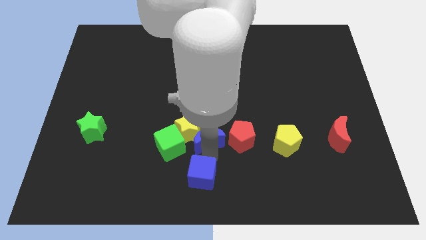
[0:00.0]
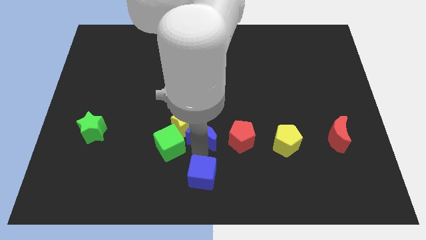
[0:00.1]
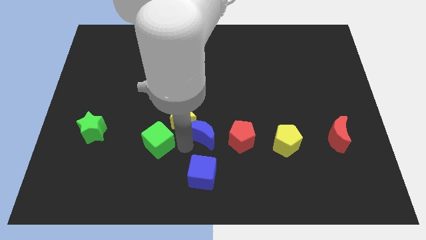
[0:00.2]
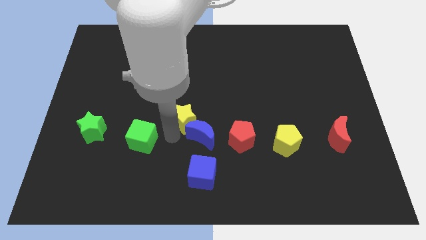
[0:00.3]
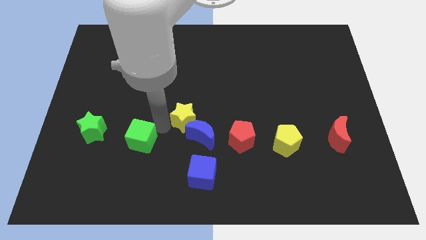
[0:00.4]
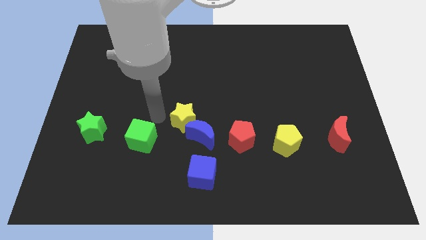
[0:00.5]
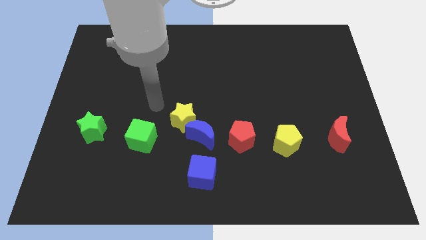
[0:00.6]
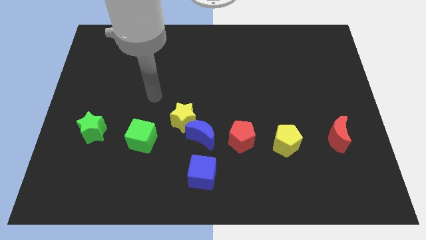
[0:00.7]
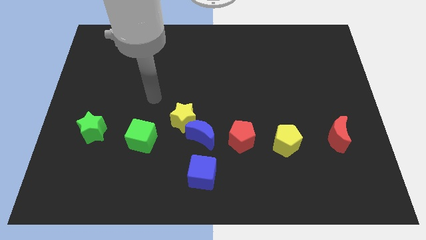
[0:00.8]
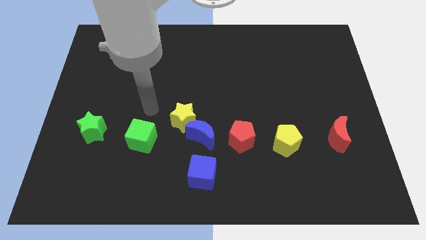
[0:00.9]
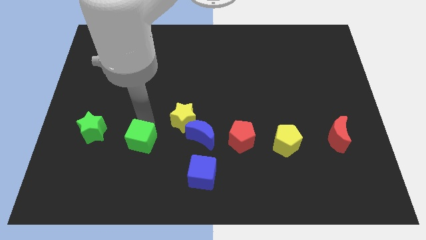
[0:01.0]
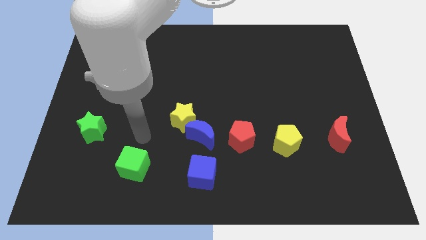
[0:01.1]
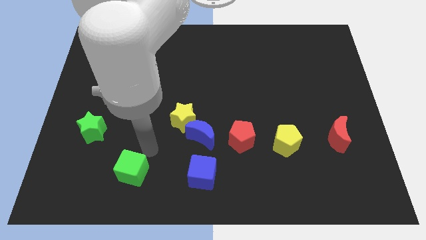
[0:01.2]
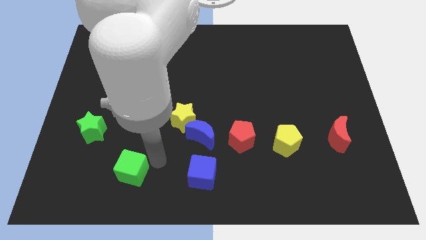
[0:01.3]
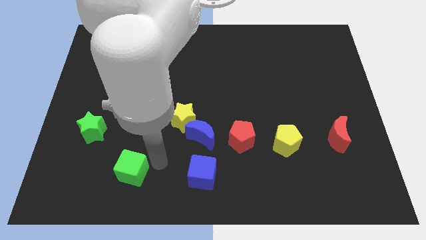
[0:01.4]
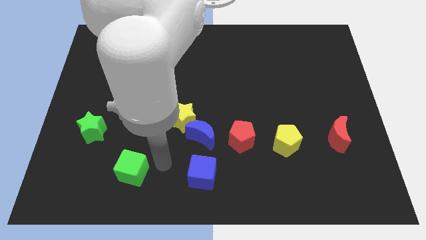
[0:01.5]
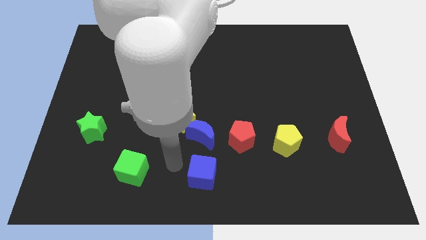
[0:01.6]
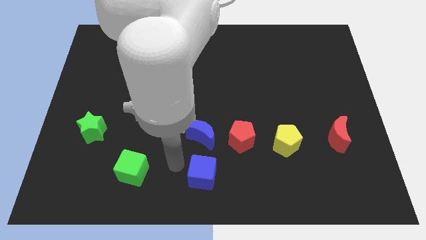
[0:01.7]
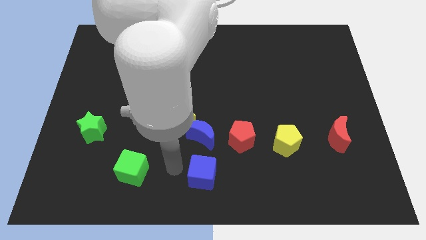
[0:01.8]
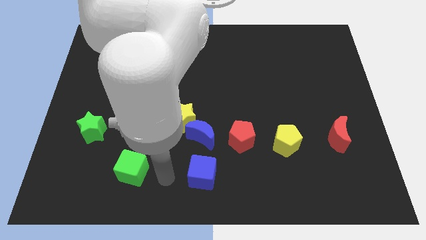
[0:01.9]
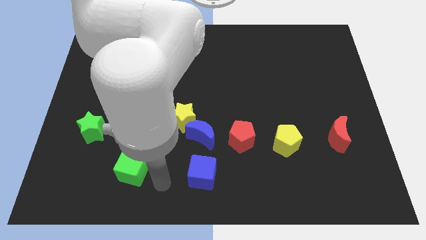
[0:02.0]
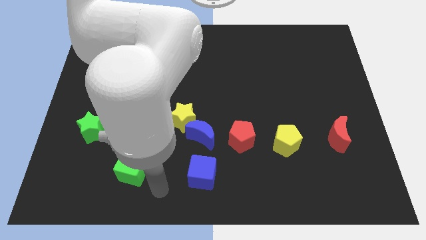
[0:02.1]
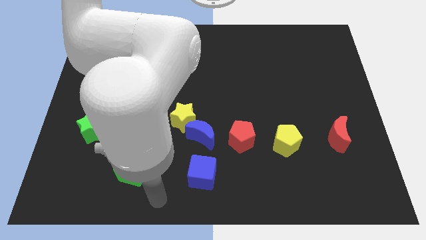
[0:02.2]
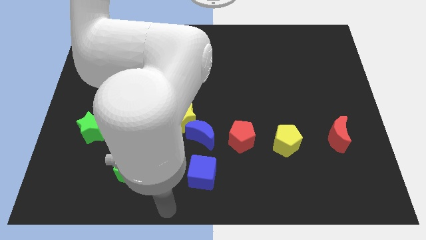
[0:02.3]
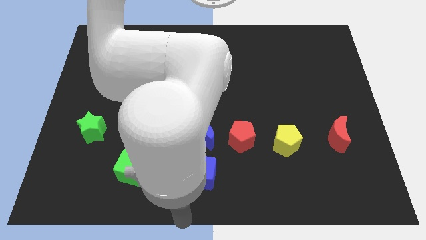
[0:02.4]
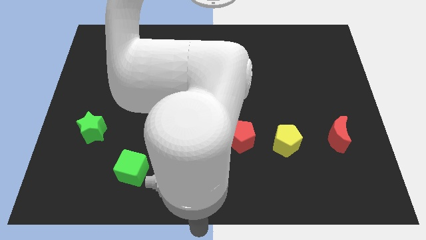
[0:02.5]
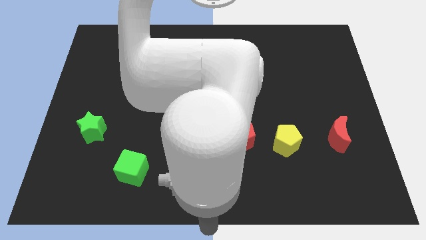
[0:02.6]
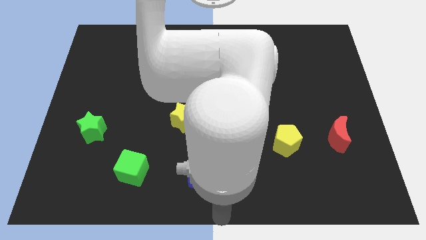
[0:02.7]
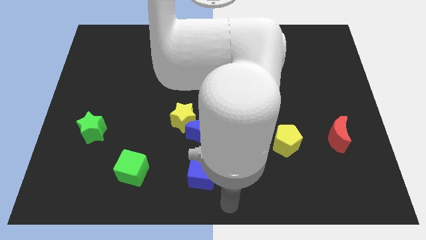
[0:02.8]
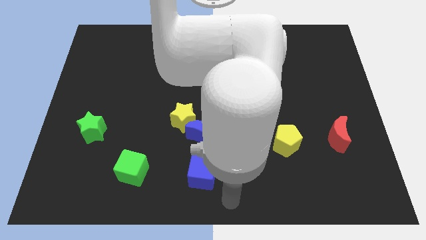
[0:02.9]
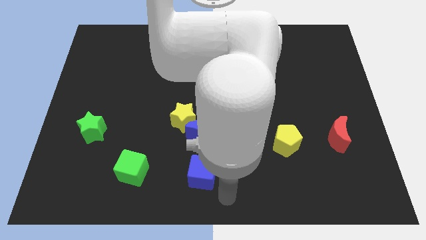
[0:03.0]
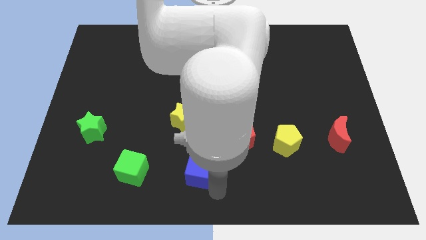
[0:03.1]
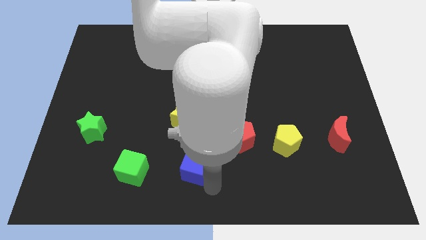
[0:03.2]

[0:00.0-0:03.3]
move the green cube parallel to blue cube

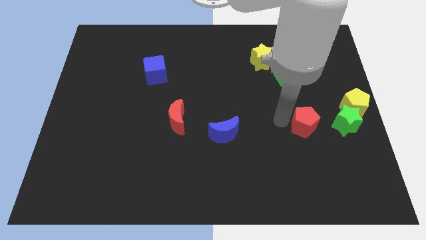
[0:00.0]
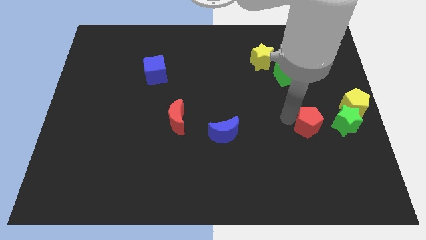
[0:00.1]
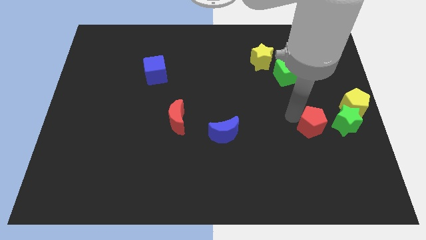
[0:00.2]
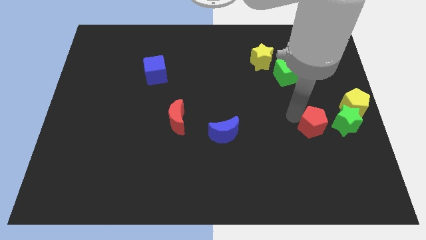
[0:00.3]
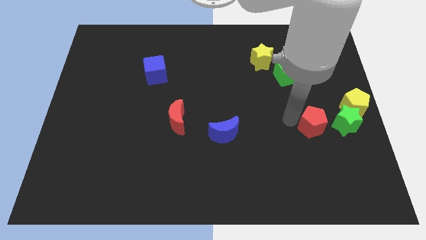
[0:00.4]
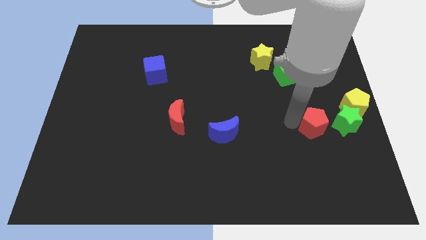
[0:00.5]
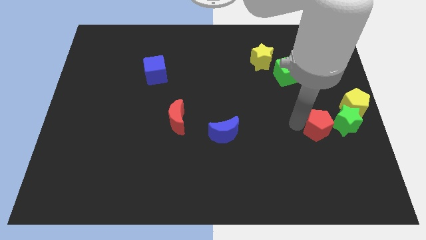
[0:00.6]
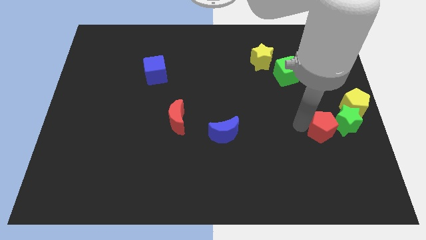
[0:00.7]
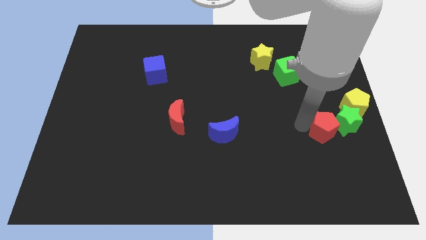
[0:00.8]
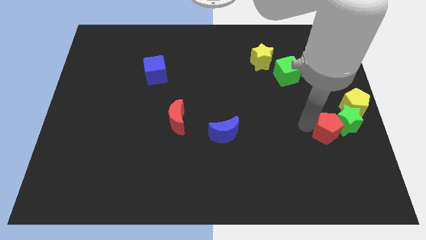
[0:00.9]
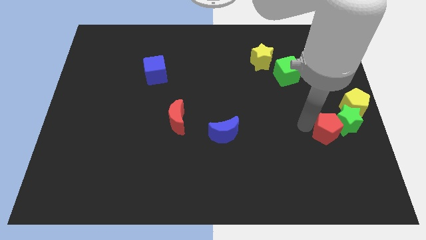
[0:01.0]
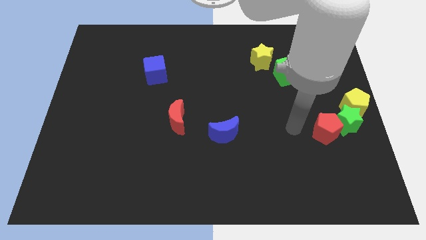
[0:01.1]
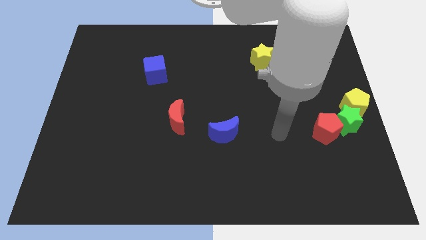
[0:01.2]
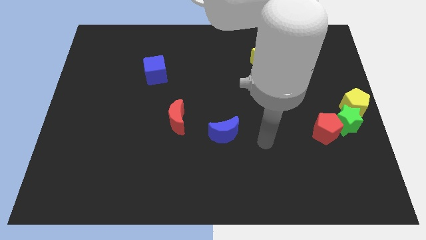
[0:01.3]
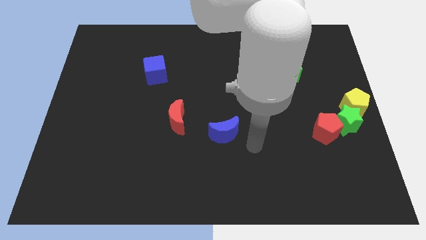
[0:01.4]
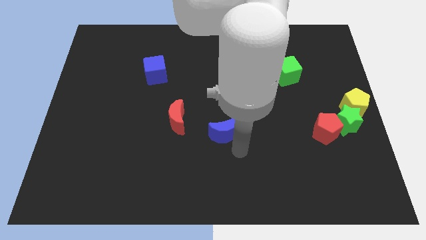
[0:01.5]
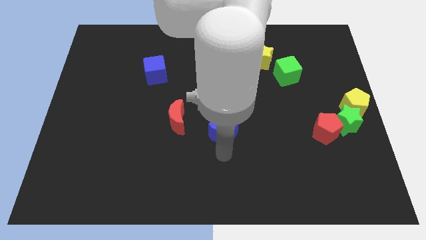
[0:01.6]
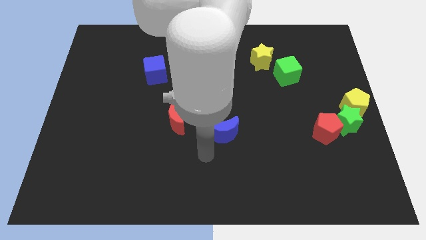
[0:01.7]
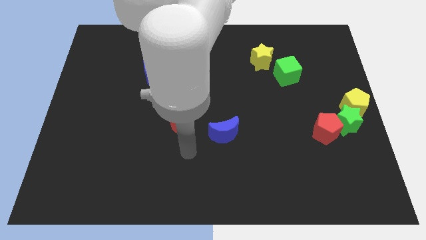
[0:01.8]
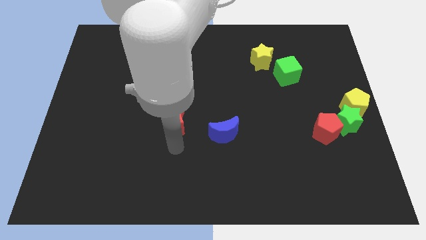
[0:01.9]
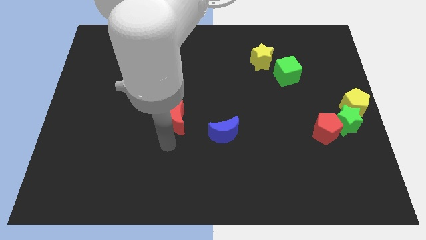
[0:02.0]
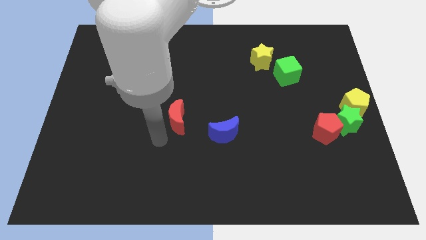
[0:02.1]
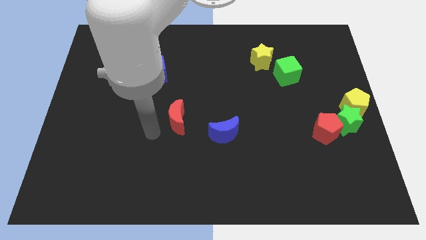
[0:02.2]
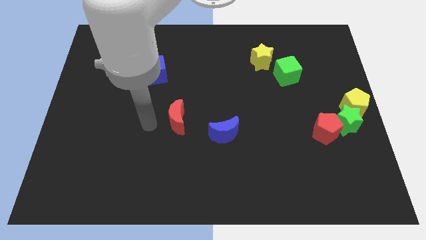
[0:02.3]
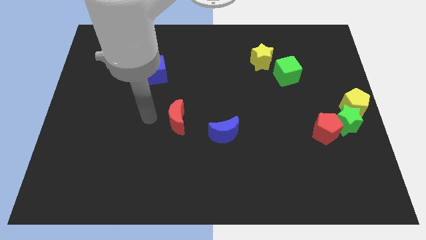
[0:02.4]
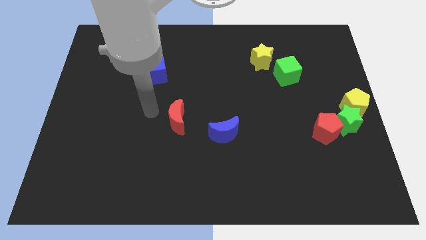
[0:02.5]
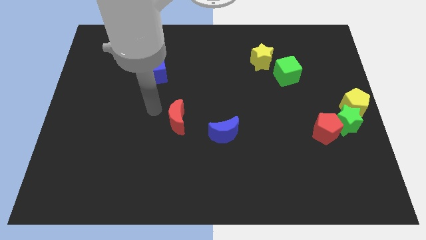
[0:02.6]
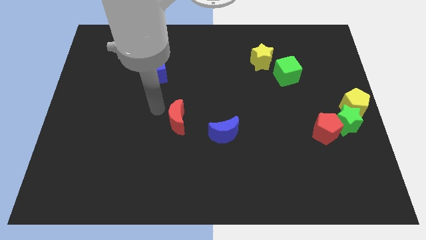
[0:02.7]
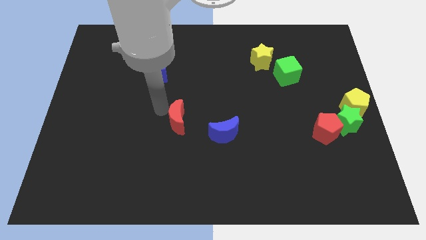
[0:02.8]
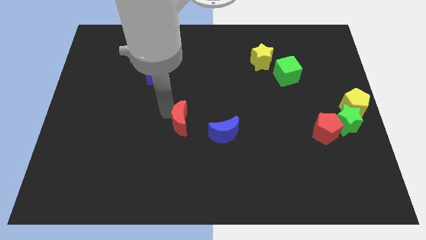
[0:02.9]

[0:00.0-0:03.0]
place the arm left to the red moon

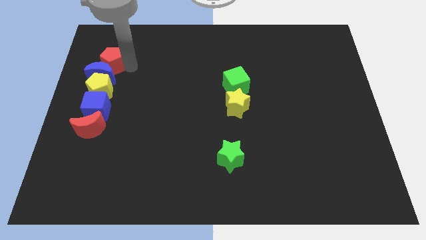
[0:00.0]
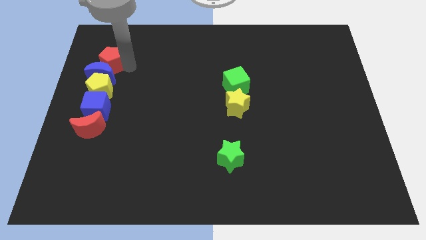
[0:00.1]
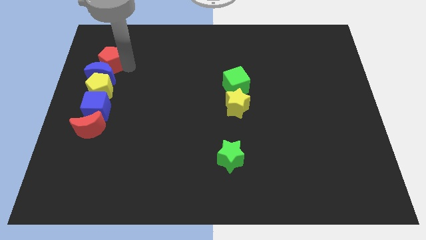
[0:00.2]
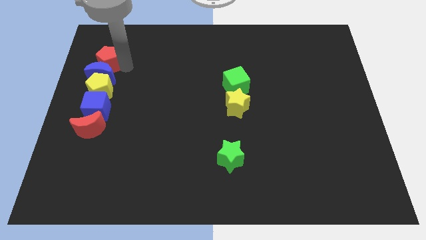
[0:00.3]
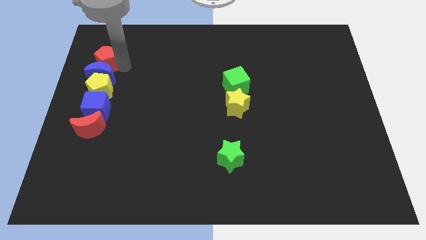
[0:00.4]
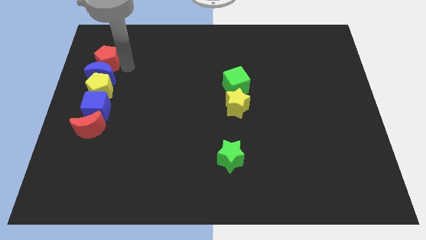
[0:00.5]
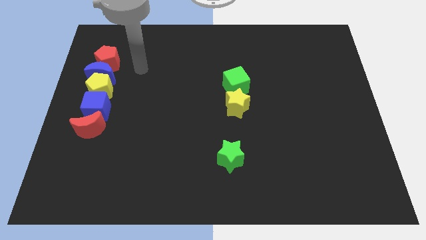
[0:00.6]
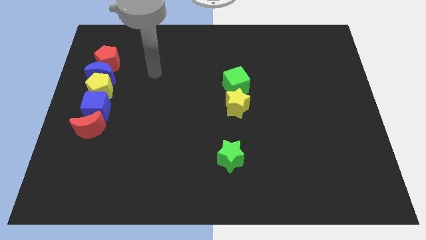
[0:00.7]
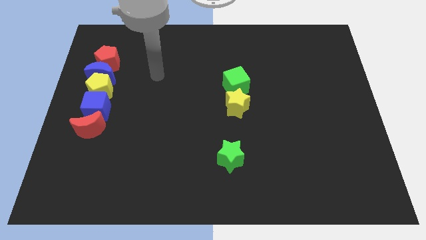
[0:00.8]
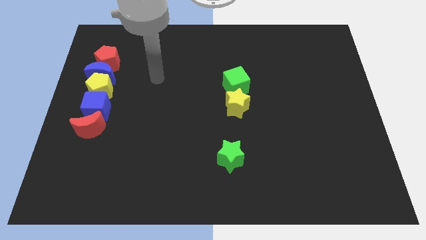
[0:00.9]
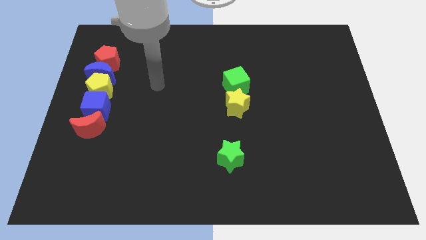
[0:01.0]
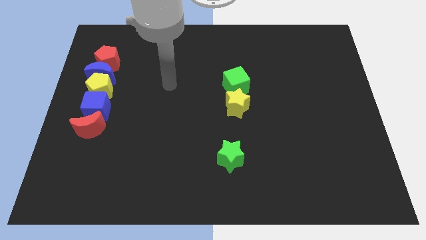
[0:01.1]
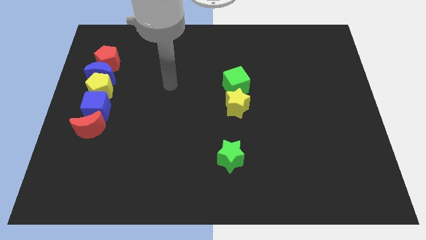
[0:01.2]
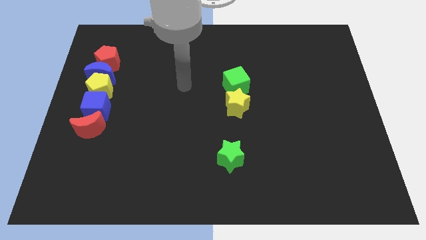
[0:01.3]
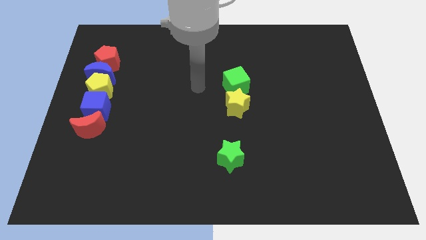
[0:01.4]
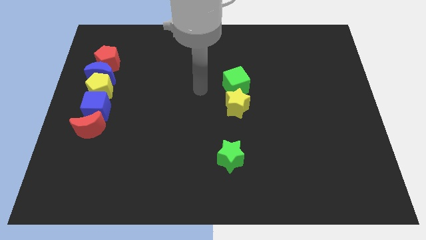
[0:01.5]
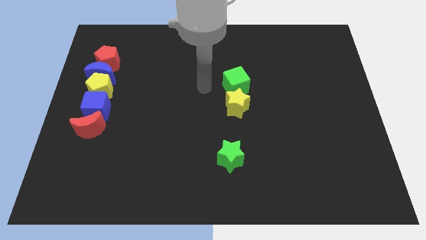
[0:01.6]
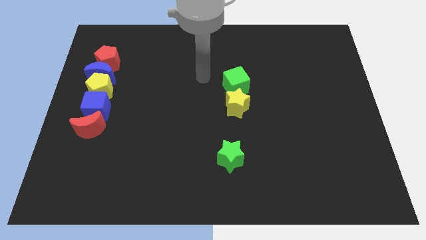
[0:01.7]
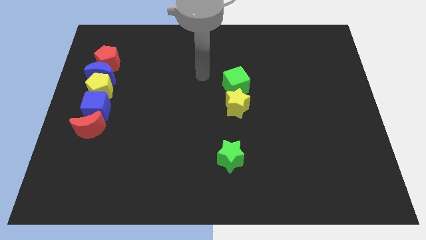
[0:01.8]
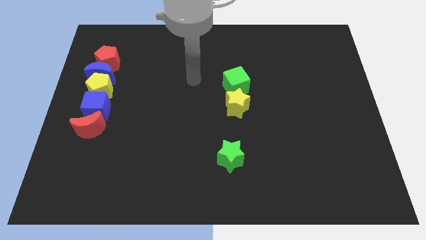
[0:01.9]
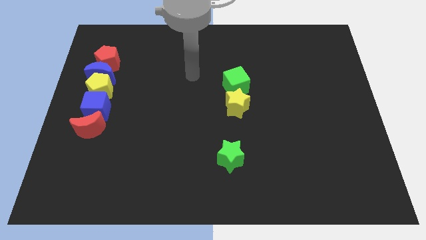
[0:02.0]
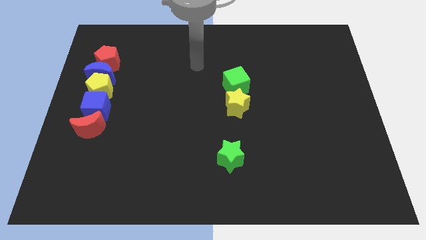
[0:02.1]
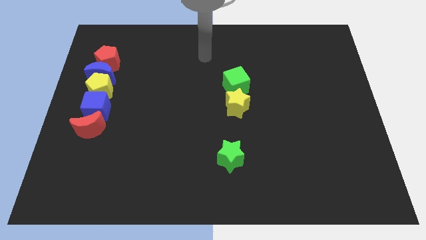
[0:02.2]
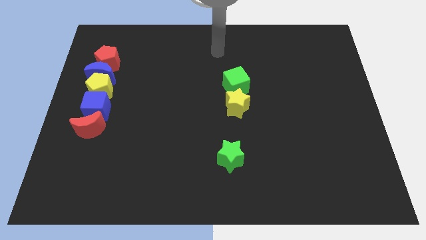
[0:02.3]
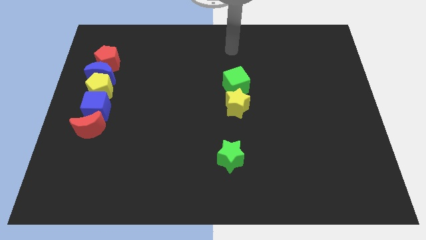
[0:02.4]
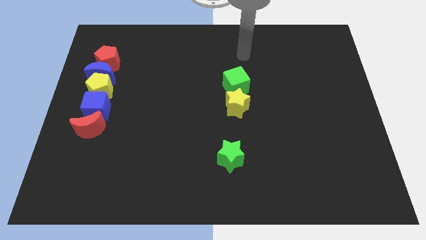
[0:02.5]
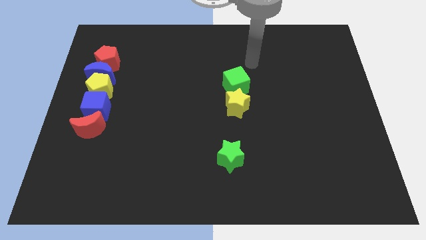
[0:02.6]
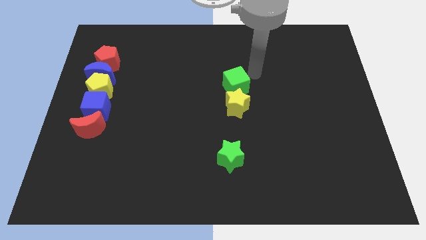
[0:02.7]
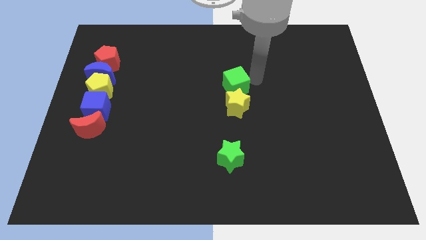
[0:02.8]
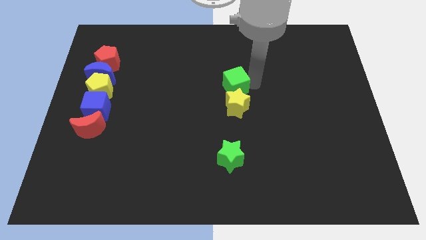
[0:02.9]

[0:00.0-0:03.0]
touch the left of the green cube
